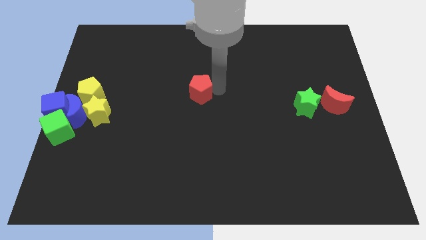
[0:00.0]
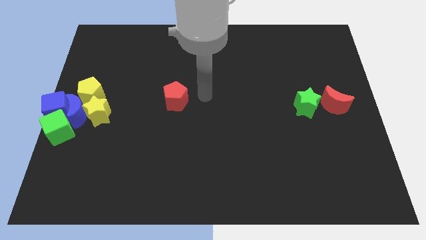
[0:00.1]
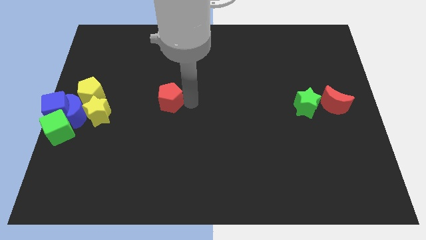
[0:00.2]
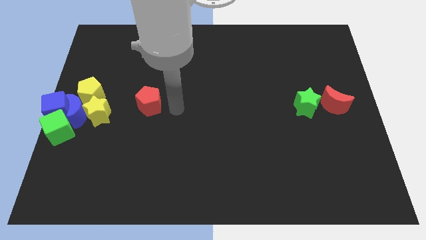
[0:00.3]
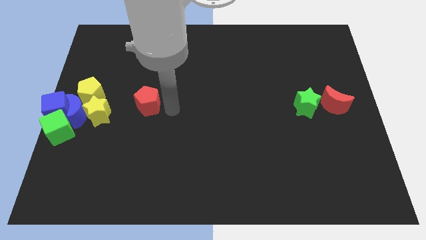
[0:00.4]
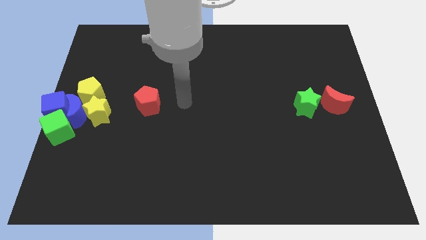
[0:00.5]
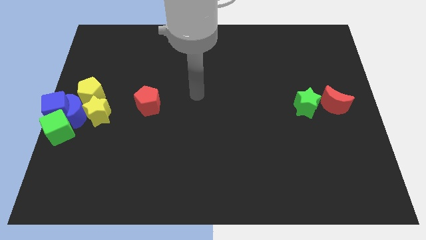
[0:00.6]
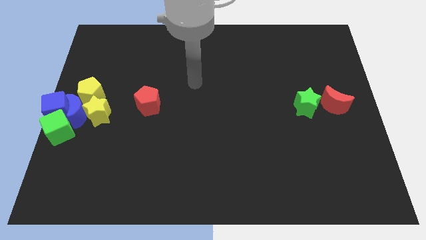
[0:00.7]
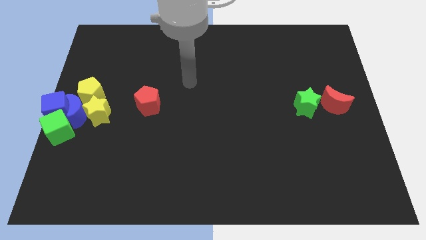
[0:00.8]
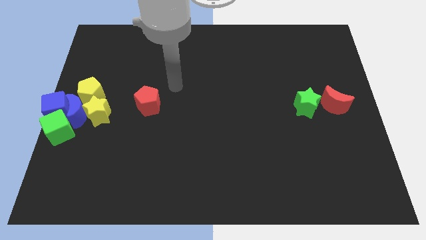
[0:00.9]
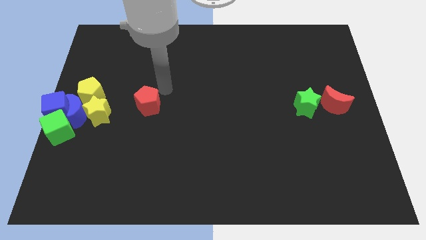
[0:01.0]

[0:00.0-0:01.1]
move red pentagon to the right of yellow blocks

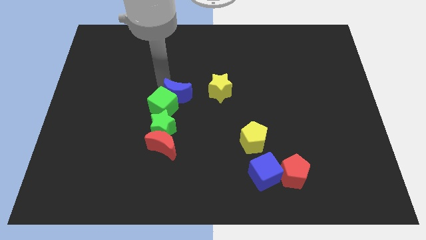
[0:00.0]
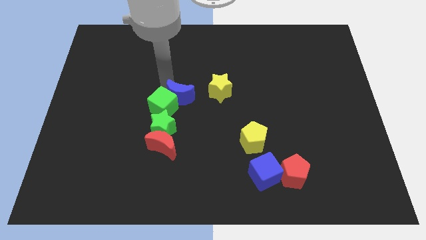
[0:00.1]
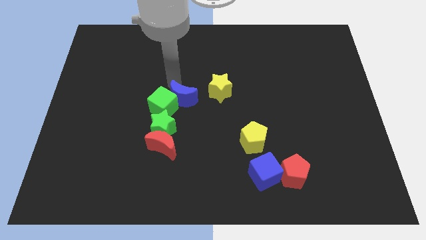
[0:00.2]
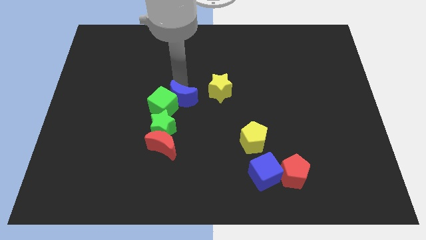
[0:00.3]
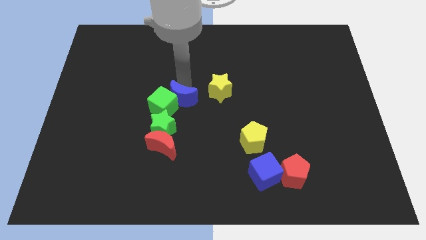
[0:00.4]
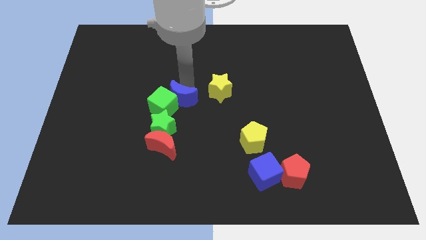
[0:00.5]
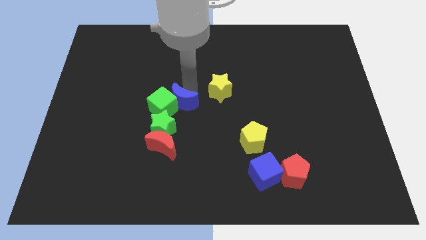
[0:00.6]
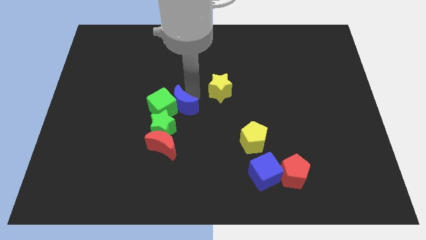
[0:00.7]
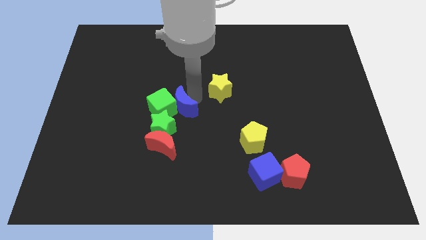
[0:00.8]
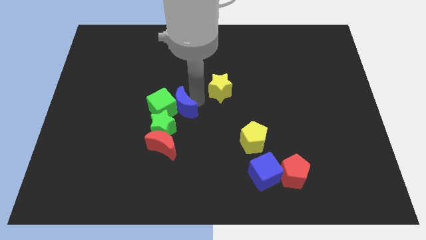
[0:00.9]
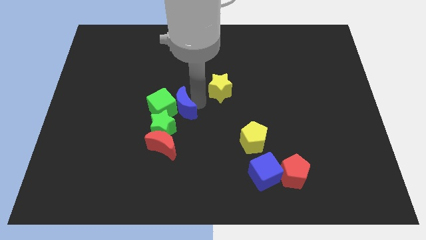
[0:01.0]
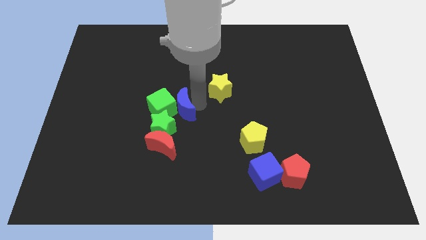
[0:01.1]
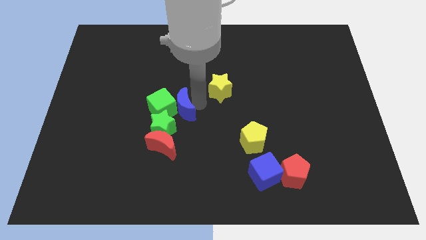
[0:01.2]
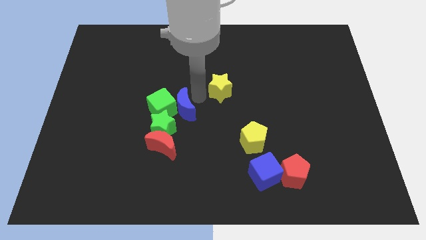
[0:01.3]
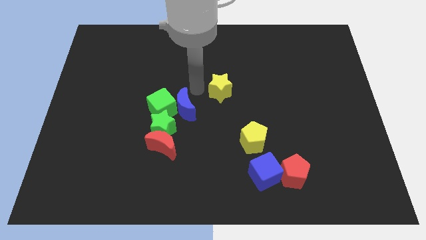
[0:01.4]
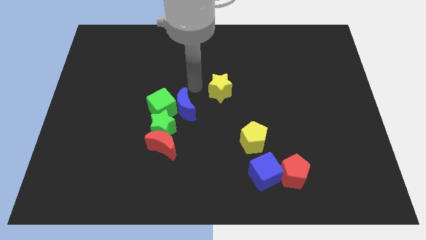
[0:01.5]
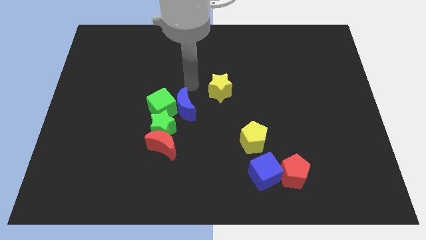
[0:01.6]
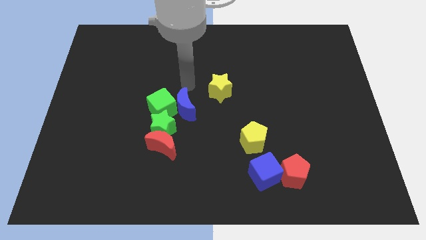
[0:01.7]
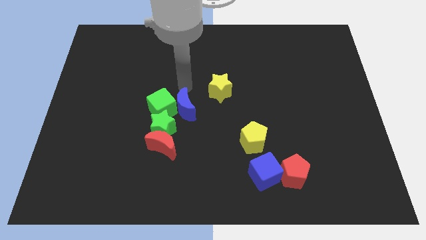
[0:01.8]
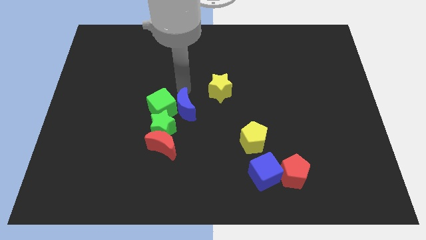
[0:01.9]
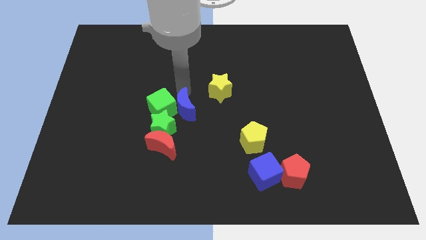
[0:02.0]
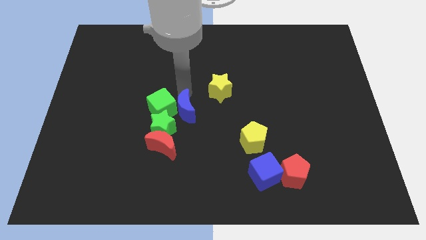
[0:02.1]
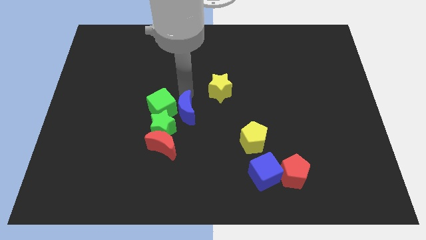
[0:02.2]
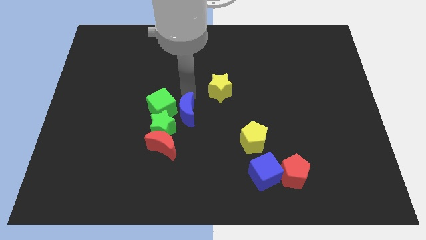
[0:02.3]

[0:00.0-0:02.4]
slide the blue crescent to the right of the green cube

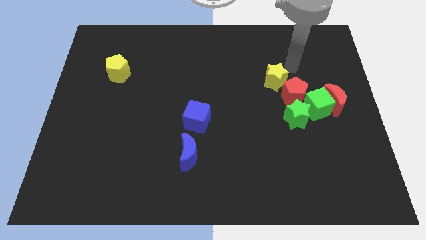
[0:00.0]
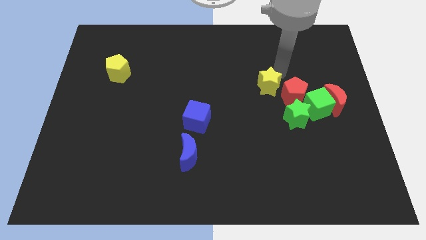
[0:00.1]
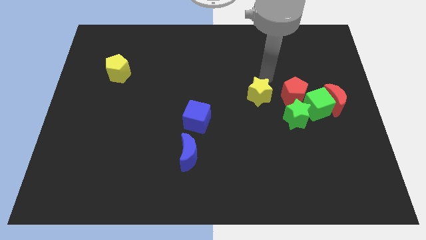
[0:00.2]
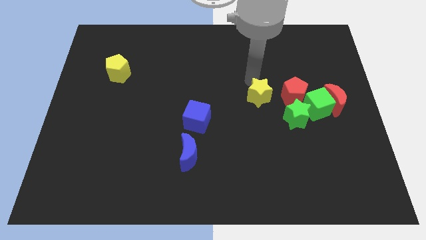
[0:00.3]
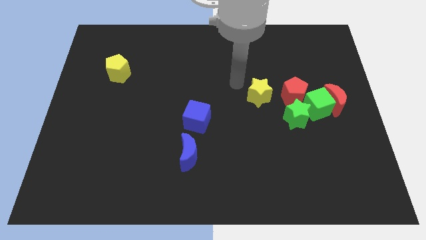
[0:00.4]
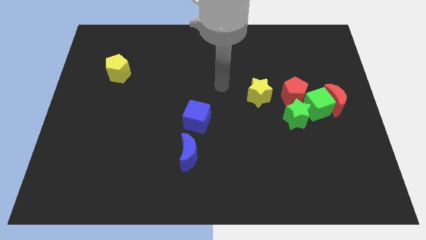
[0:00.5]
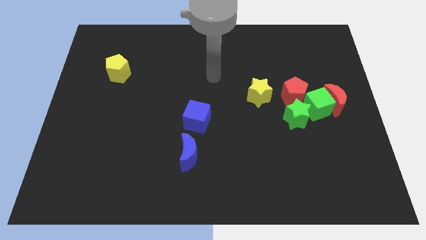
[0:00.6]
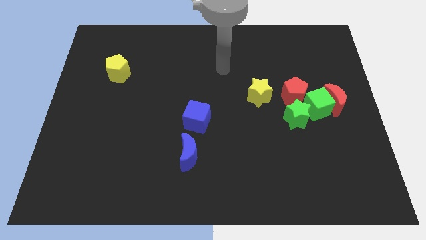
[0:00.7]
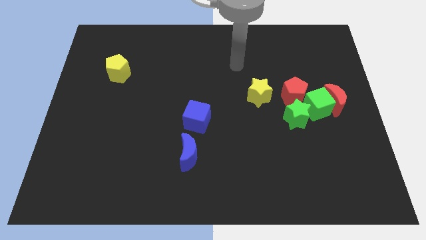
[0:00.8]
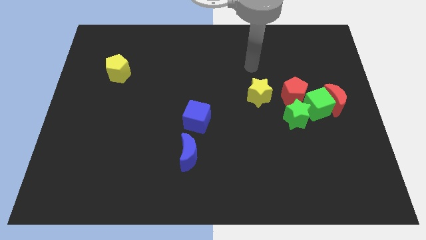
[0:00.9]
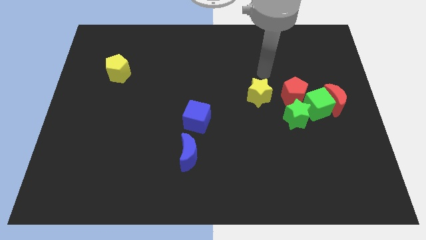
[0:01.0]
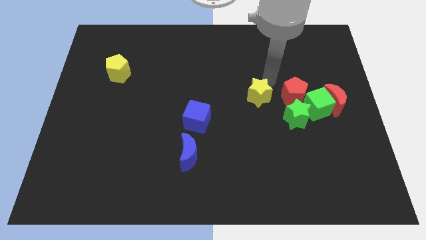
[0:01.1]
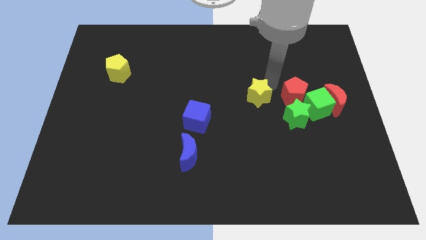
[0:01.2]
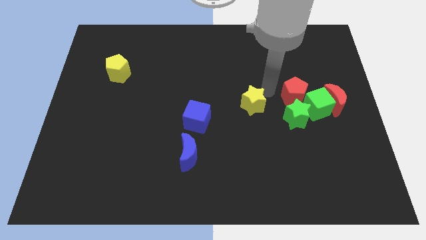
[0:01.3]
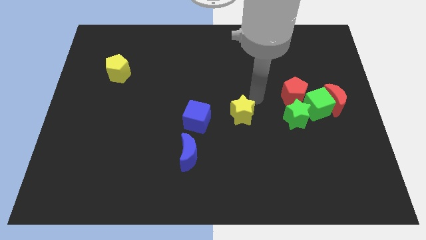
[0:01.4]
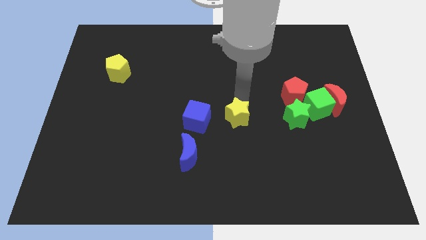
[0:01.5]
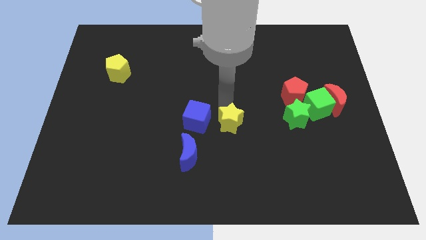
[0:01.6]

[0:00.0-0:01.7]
place the yellow star to right side of the blue cube

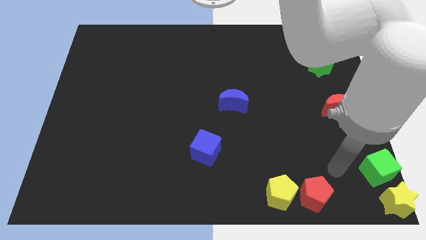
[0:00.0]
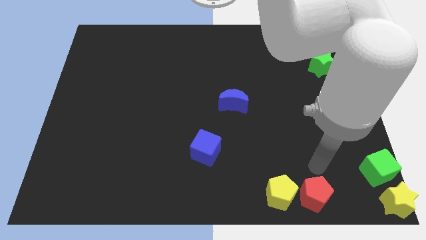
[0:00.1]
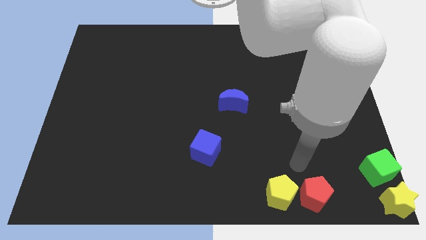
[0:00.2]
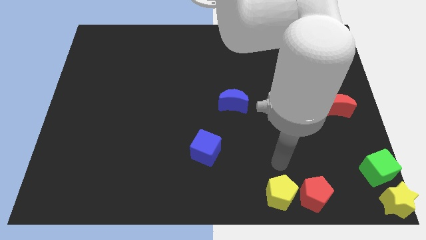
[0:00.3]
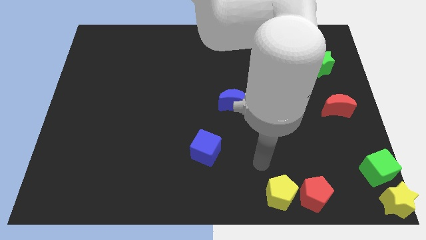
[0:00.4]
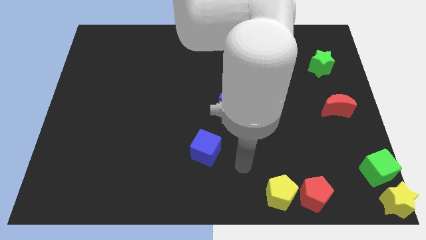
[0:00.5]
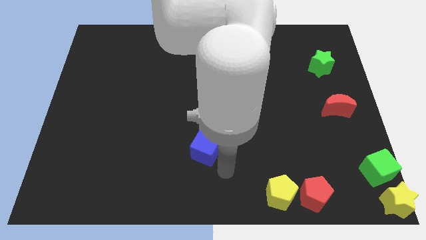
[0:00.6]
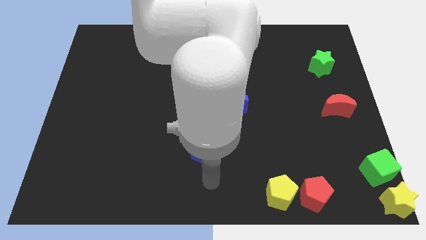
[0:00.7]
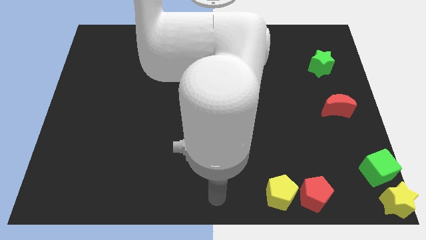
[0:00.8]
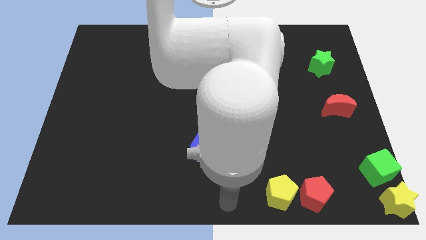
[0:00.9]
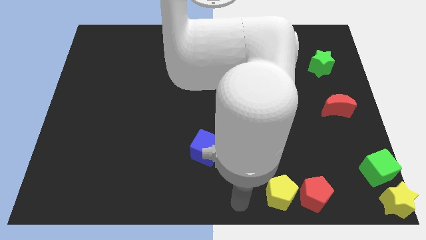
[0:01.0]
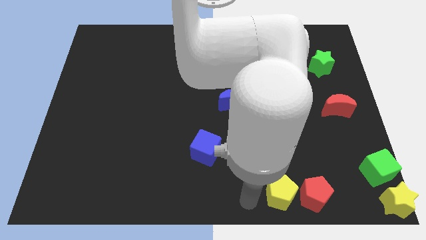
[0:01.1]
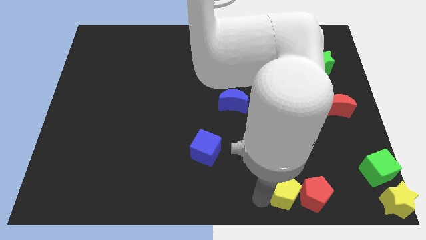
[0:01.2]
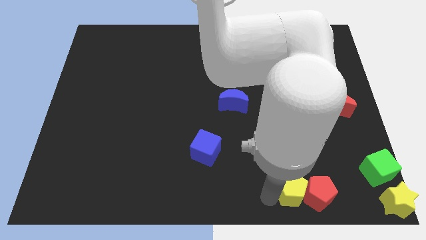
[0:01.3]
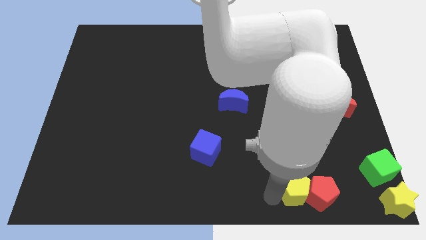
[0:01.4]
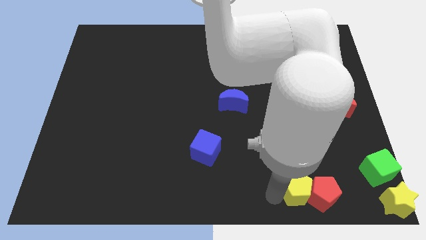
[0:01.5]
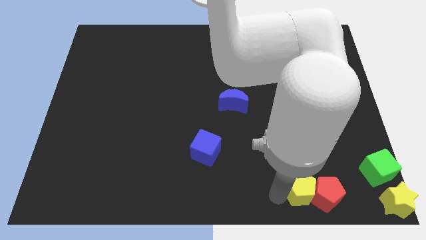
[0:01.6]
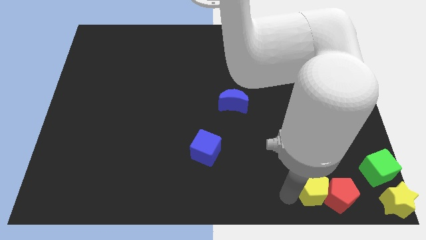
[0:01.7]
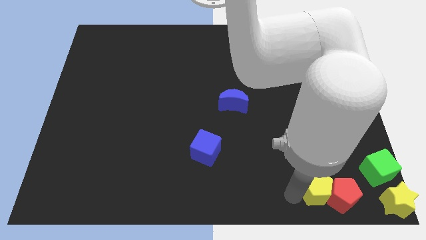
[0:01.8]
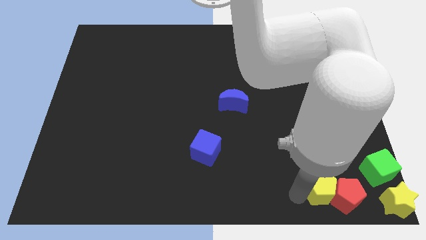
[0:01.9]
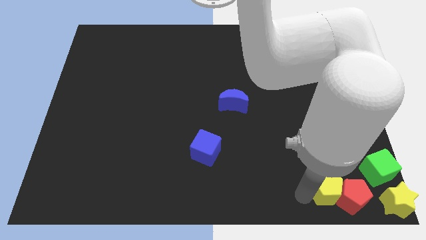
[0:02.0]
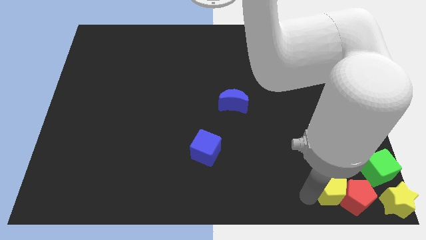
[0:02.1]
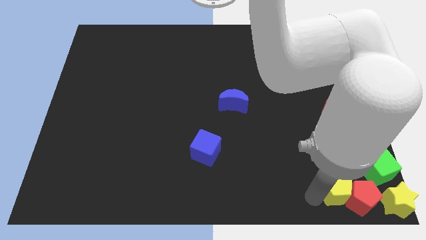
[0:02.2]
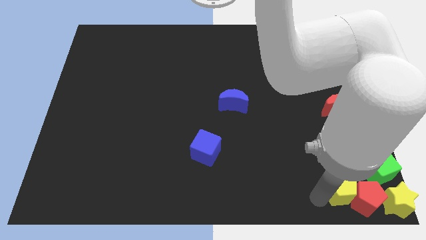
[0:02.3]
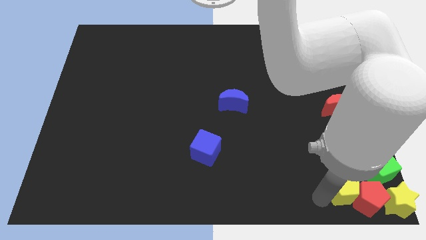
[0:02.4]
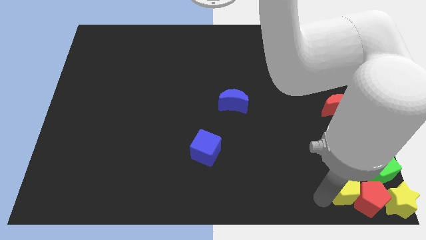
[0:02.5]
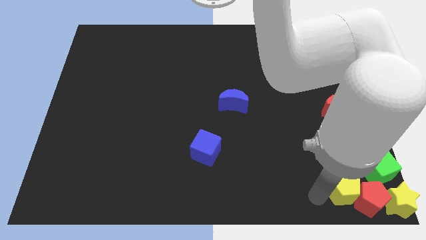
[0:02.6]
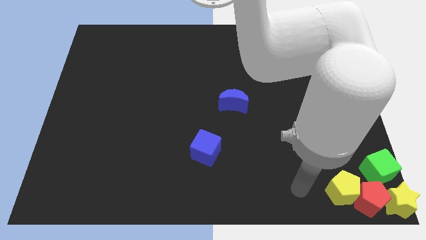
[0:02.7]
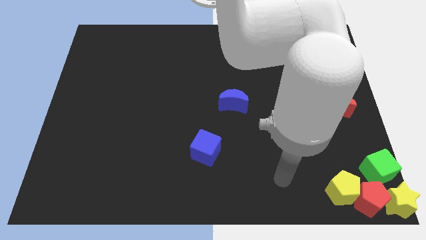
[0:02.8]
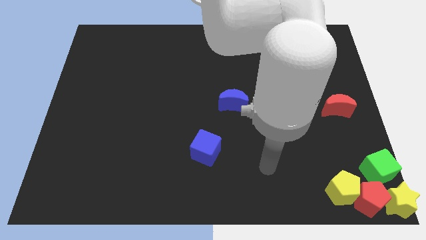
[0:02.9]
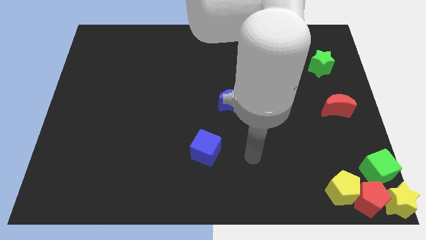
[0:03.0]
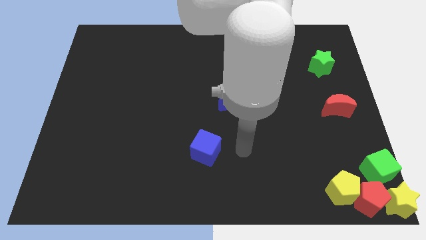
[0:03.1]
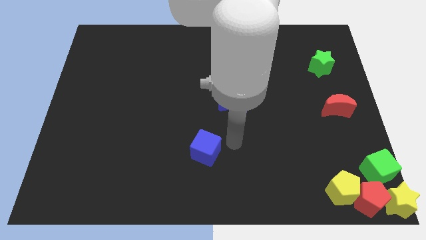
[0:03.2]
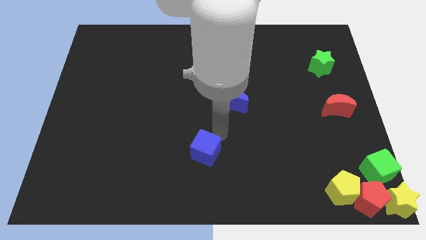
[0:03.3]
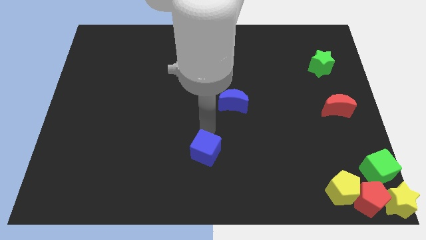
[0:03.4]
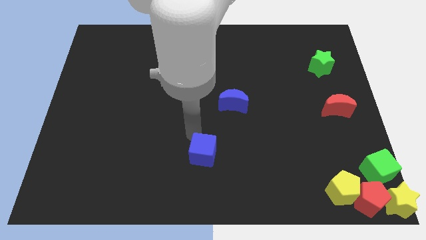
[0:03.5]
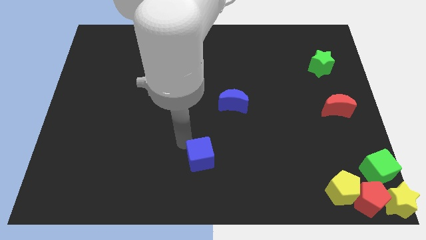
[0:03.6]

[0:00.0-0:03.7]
push the red pentagon with yellow pentagon to the bottom right of the board

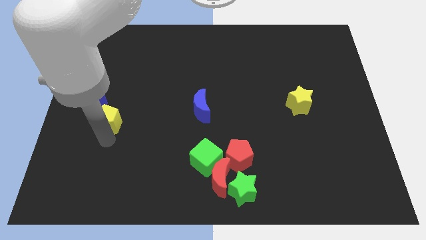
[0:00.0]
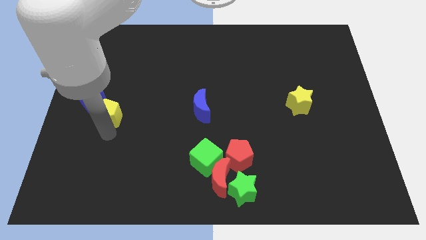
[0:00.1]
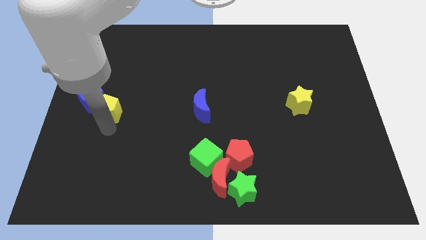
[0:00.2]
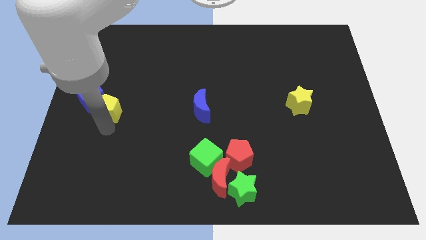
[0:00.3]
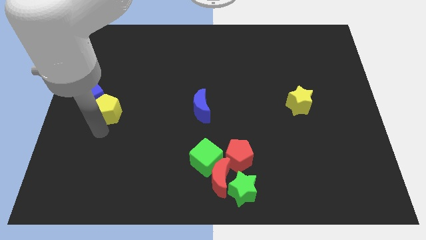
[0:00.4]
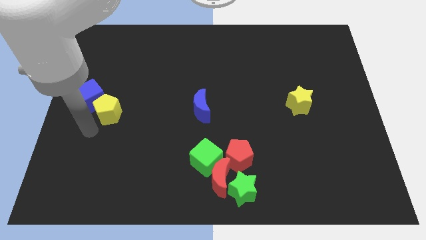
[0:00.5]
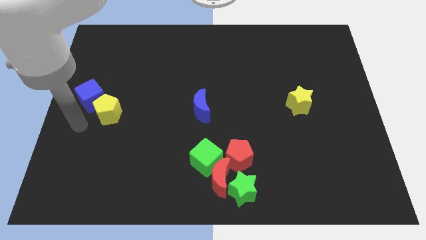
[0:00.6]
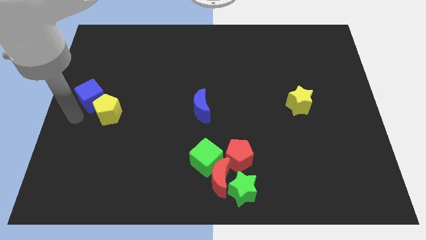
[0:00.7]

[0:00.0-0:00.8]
move yellow pentagon diagonally below the blue cube
